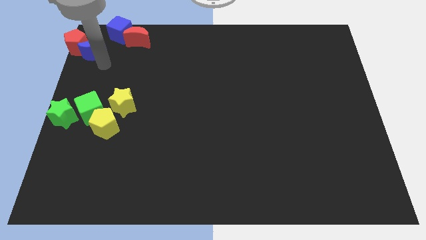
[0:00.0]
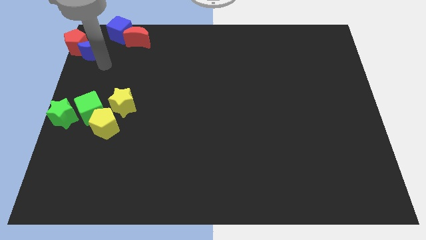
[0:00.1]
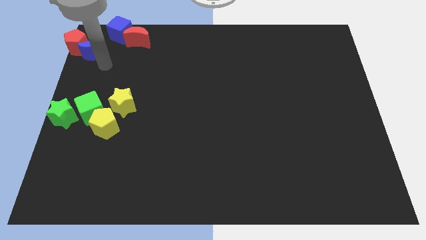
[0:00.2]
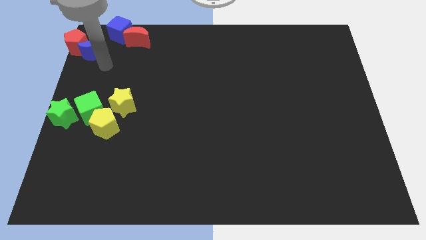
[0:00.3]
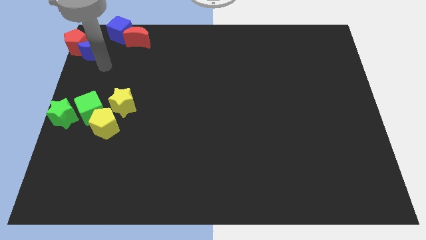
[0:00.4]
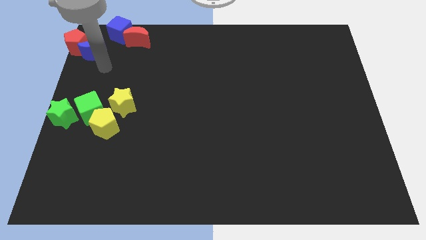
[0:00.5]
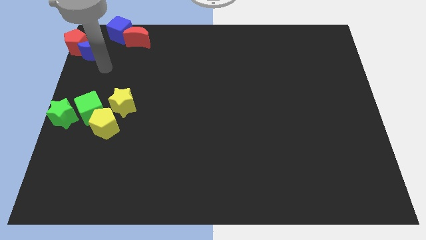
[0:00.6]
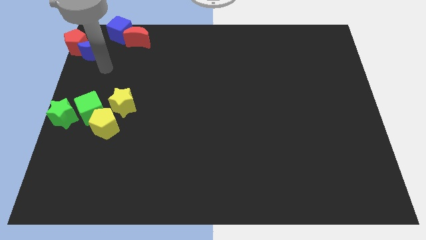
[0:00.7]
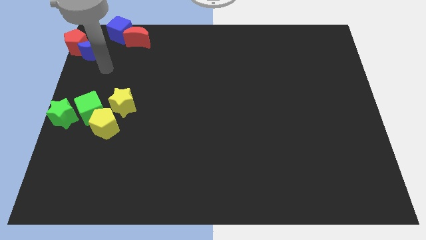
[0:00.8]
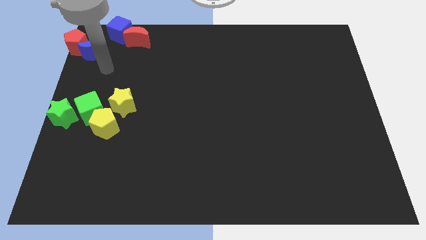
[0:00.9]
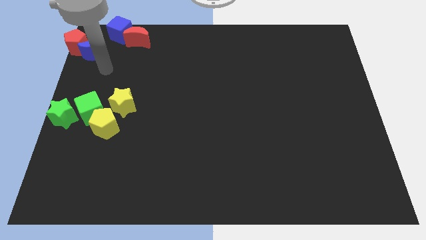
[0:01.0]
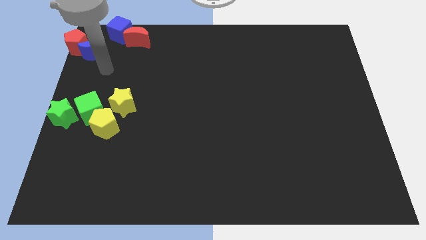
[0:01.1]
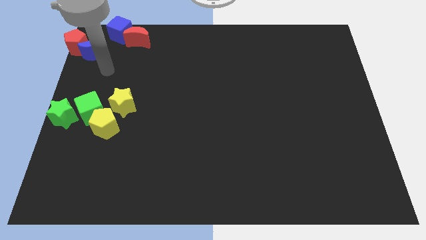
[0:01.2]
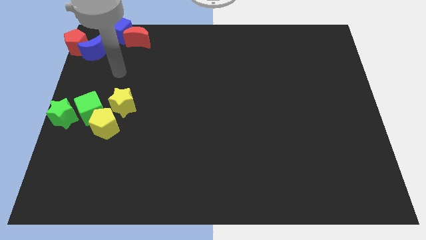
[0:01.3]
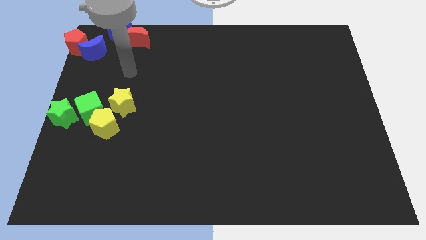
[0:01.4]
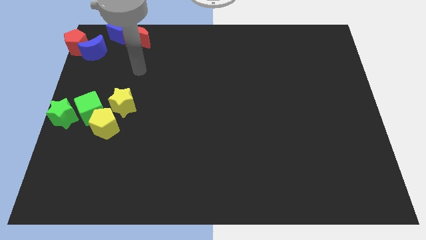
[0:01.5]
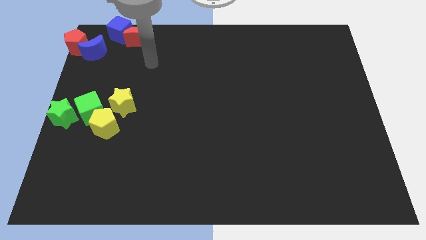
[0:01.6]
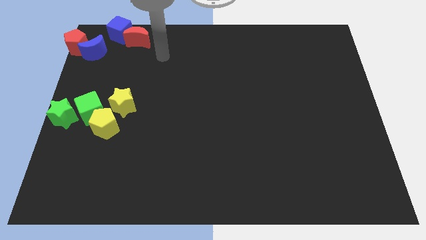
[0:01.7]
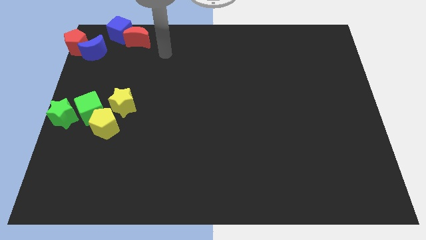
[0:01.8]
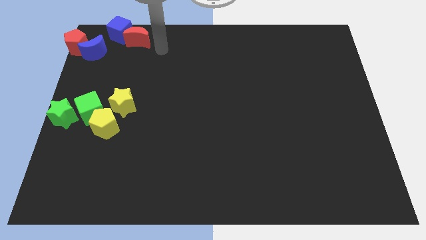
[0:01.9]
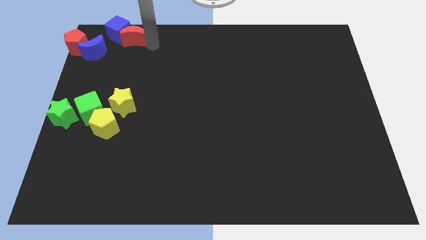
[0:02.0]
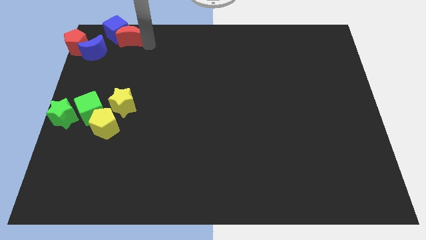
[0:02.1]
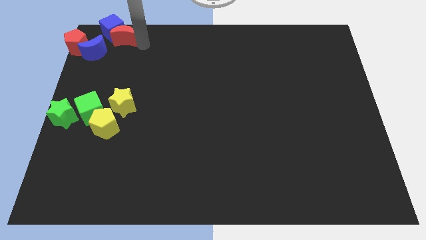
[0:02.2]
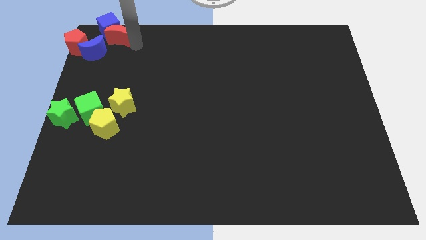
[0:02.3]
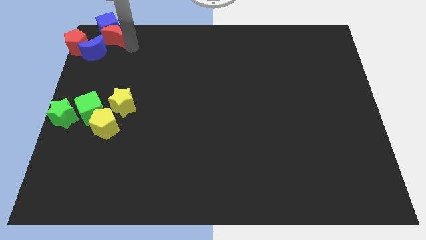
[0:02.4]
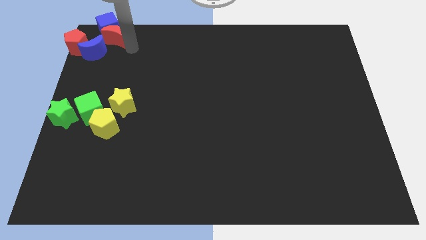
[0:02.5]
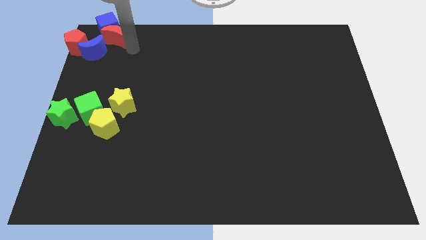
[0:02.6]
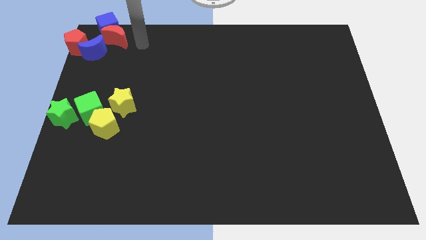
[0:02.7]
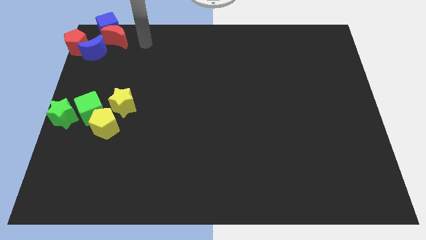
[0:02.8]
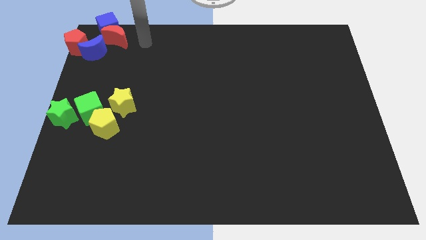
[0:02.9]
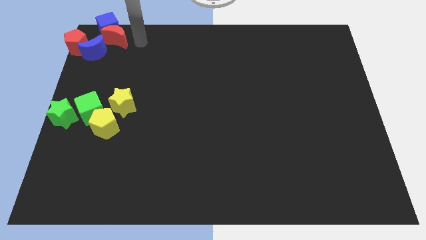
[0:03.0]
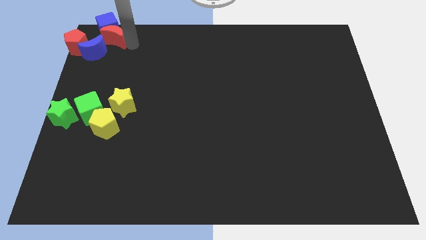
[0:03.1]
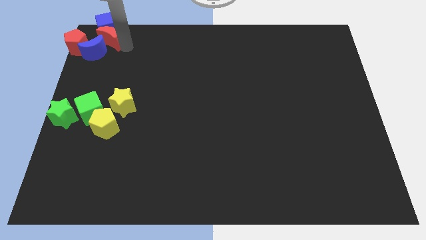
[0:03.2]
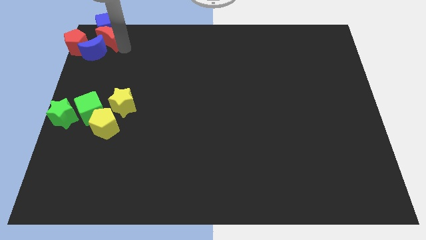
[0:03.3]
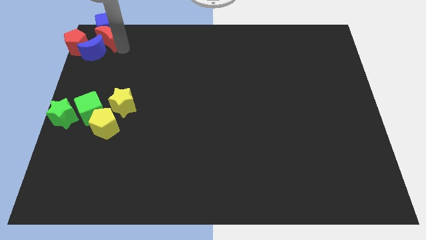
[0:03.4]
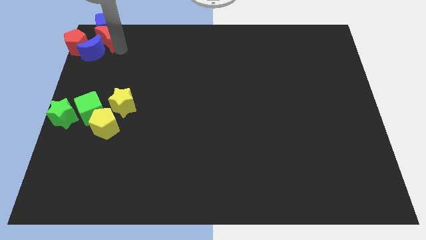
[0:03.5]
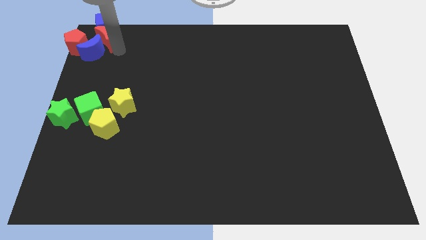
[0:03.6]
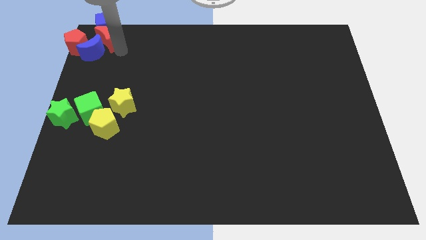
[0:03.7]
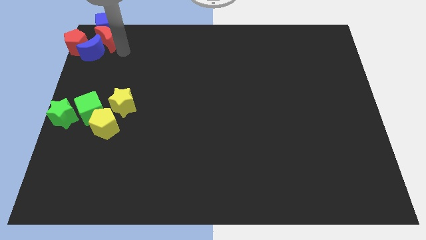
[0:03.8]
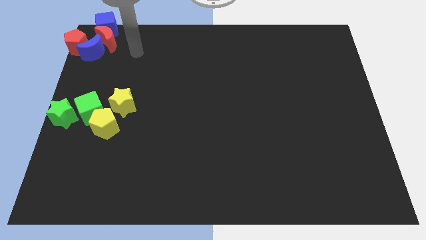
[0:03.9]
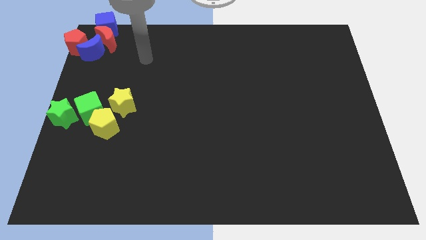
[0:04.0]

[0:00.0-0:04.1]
push red moon in to top left corner

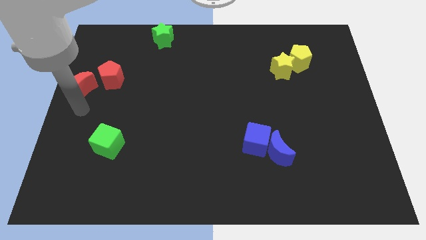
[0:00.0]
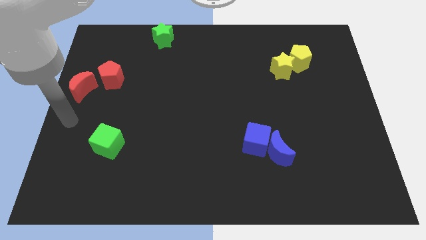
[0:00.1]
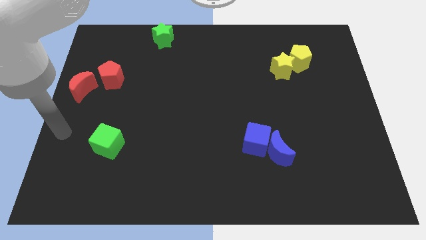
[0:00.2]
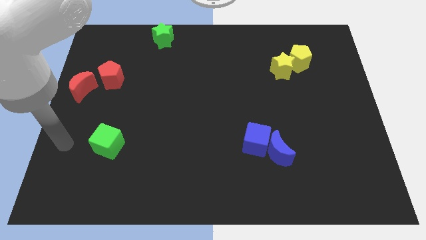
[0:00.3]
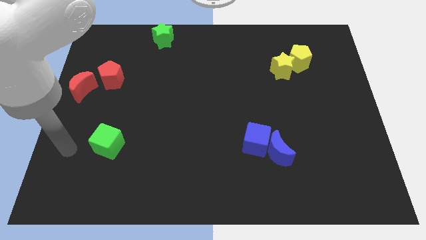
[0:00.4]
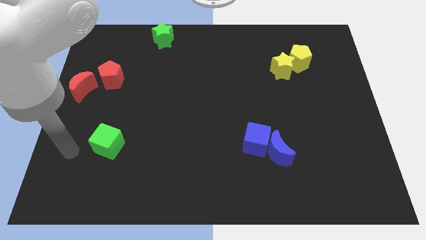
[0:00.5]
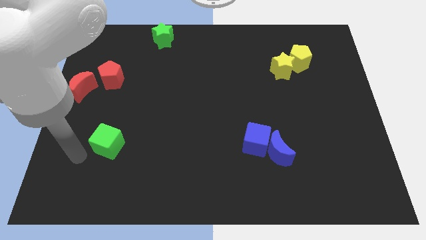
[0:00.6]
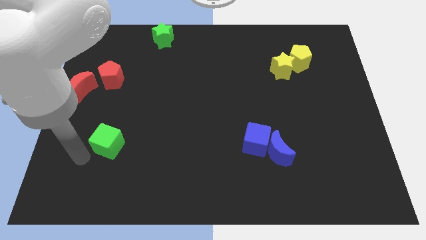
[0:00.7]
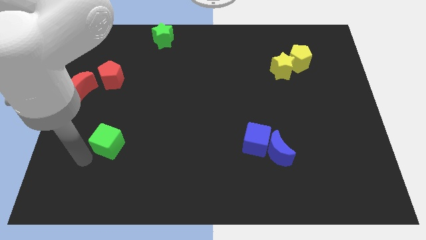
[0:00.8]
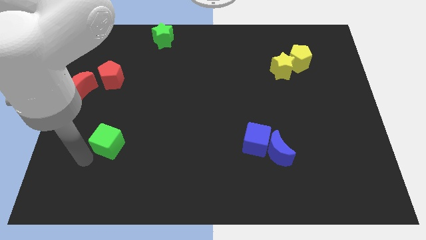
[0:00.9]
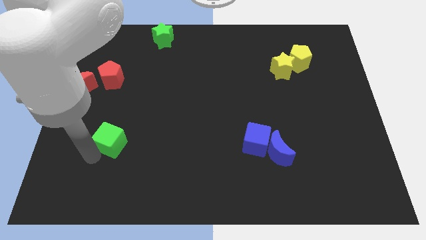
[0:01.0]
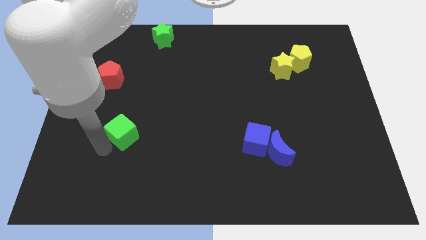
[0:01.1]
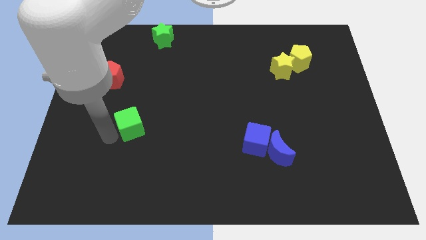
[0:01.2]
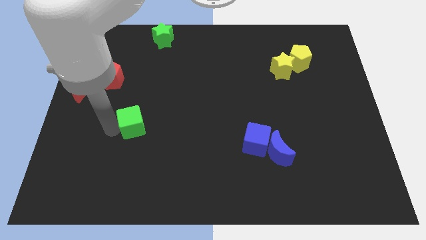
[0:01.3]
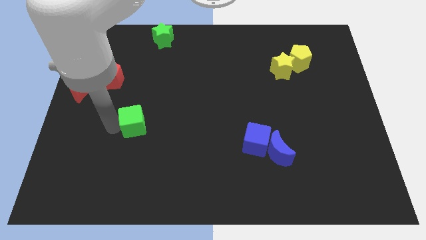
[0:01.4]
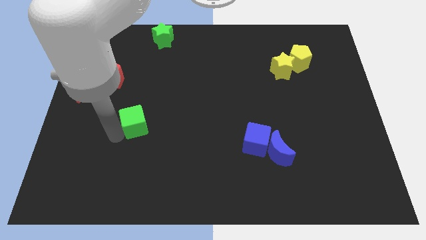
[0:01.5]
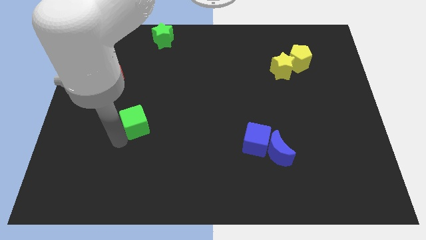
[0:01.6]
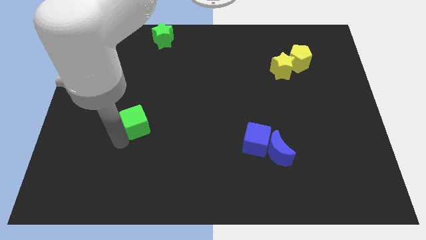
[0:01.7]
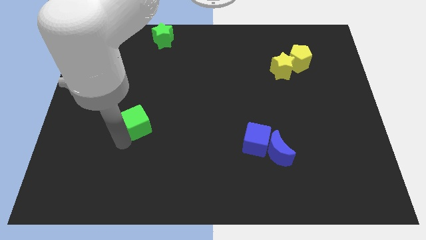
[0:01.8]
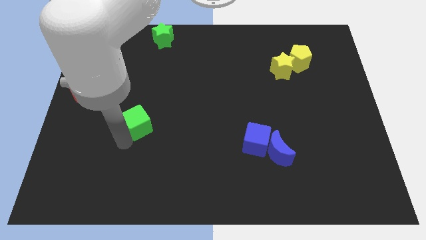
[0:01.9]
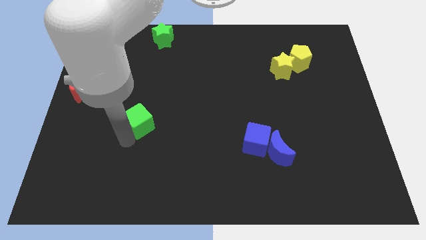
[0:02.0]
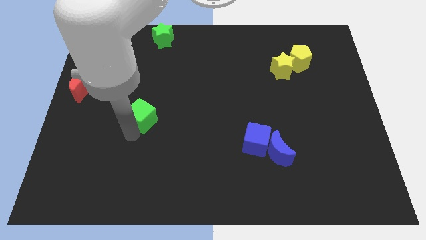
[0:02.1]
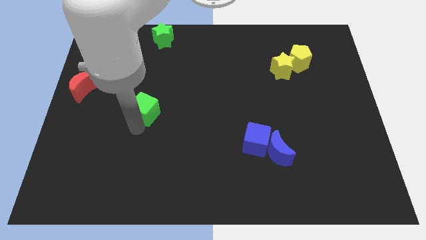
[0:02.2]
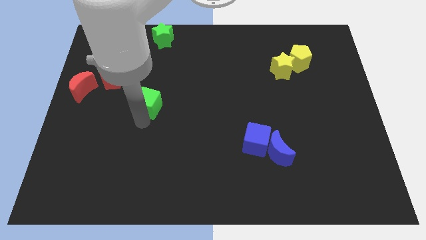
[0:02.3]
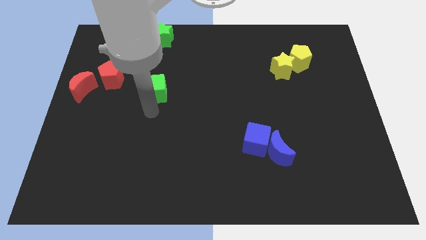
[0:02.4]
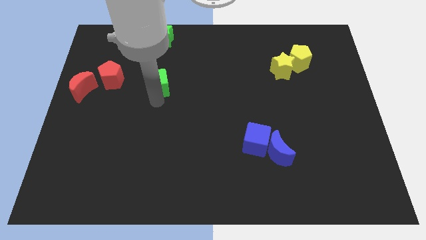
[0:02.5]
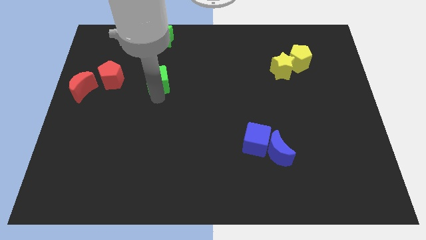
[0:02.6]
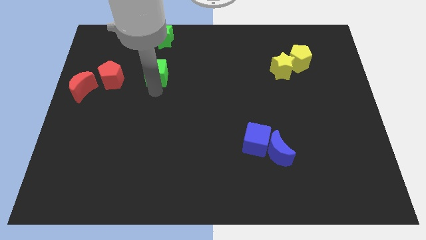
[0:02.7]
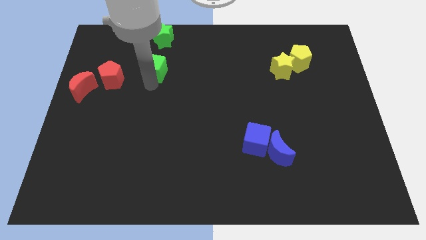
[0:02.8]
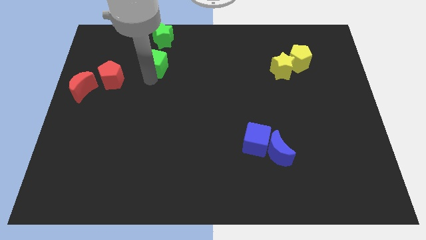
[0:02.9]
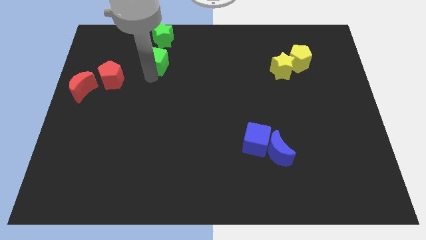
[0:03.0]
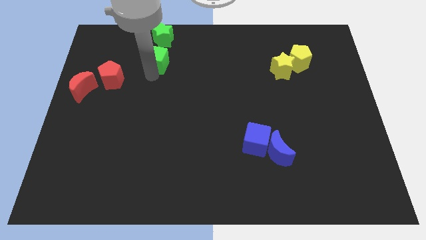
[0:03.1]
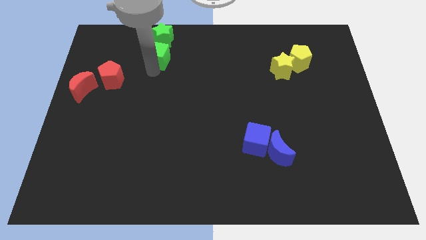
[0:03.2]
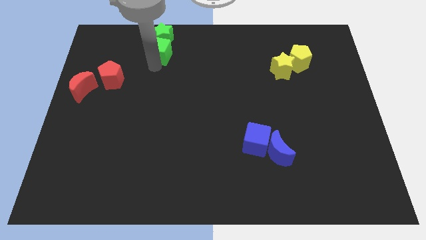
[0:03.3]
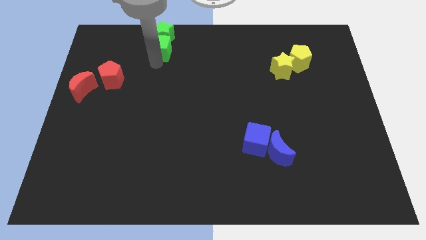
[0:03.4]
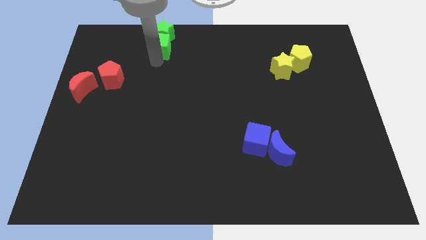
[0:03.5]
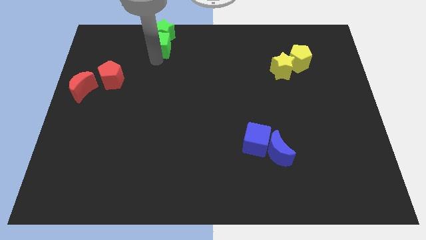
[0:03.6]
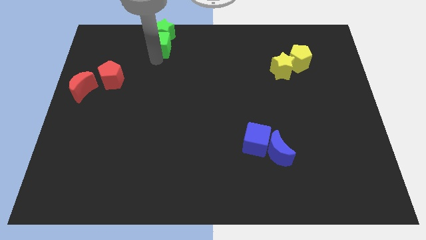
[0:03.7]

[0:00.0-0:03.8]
move the green cube into the bottom side of the green star

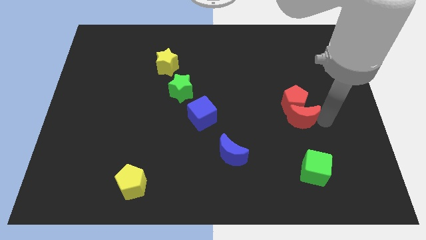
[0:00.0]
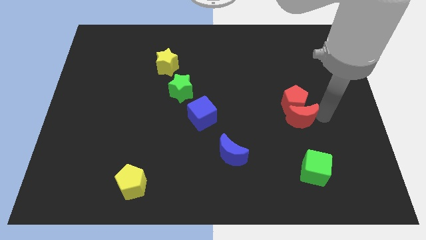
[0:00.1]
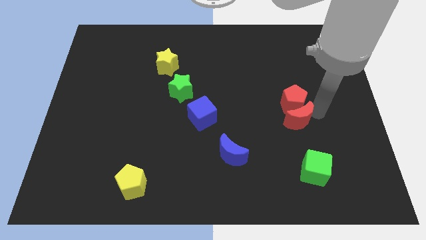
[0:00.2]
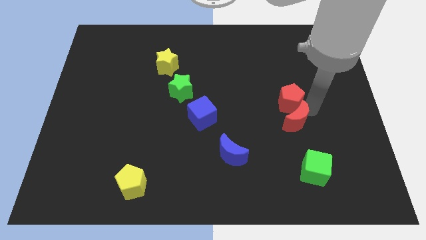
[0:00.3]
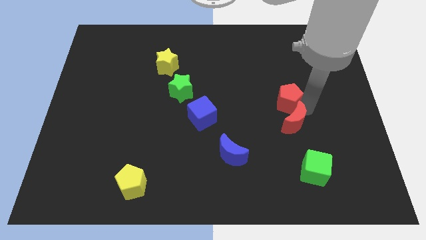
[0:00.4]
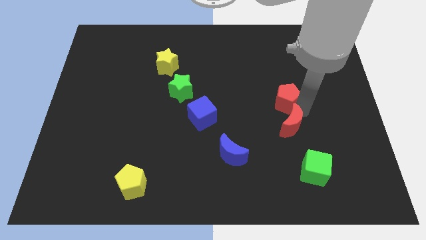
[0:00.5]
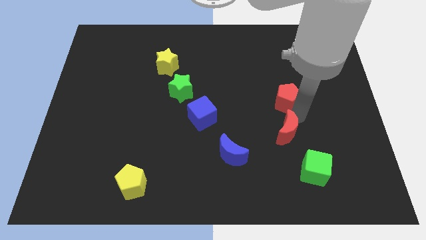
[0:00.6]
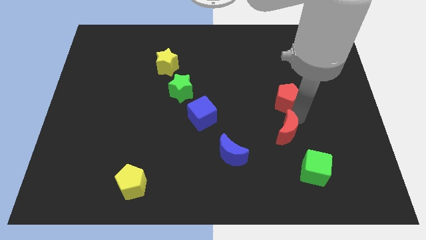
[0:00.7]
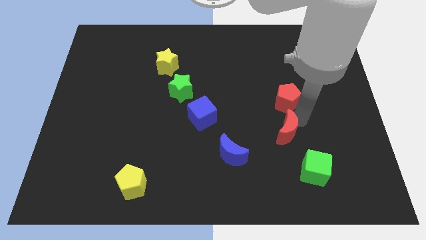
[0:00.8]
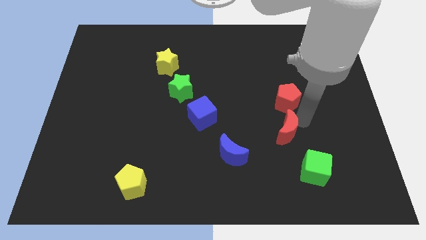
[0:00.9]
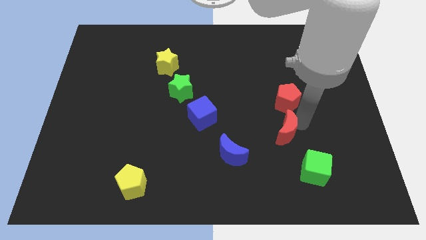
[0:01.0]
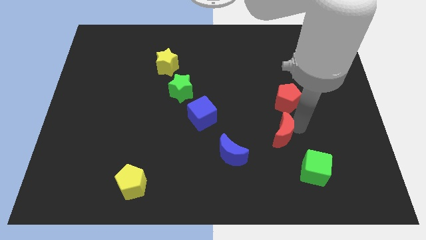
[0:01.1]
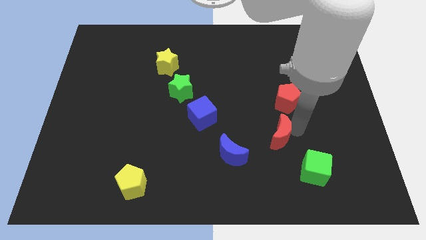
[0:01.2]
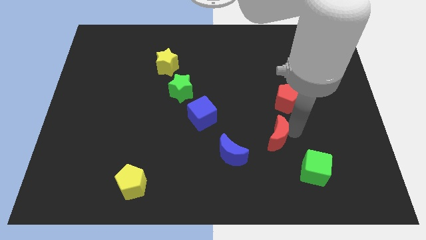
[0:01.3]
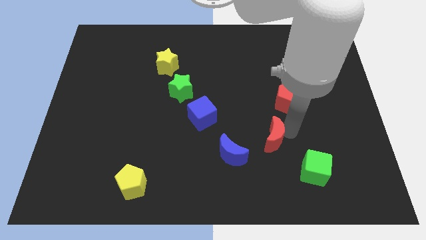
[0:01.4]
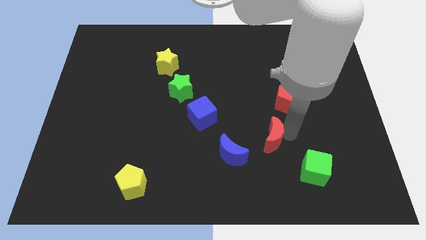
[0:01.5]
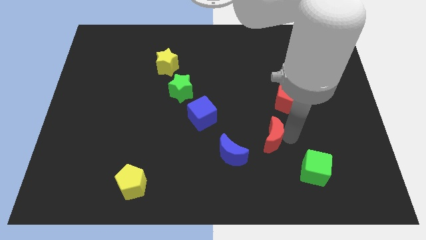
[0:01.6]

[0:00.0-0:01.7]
separate the red moon from the red pentagon
